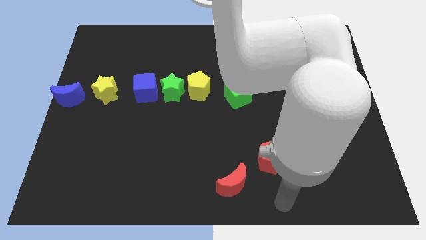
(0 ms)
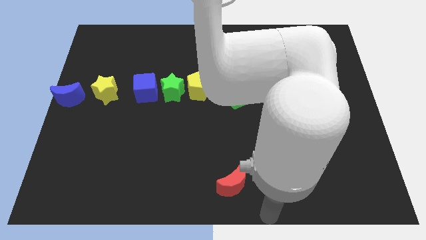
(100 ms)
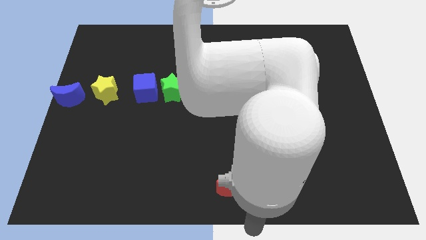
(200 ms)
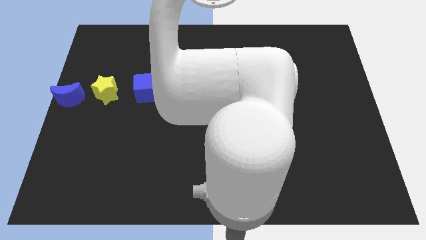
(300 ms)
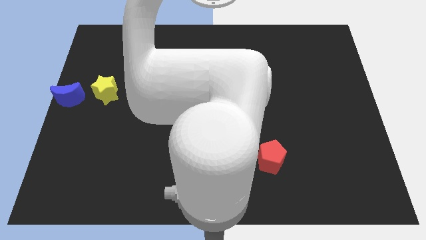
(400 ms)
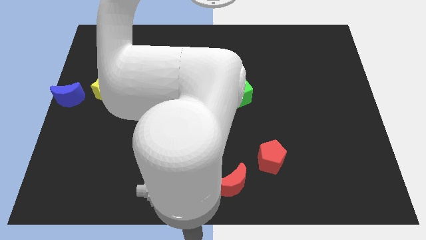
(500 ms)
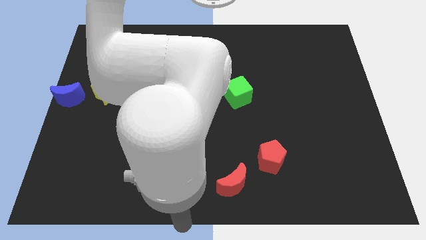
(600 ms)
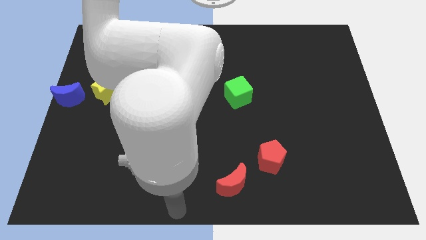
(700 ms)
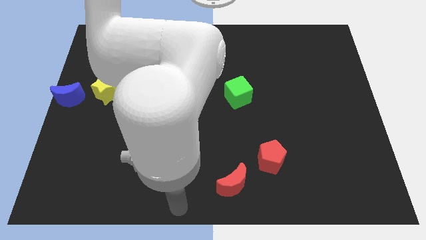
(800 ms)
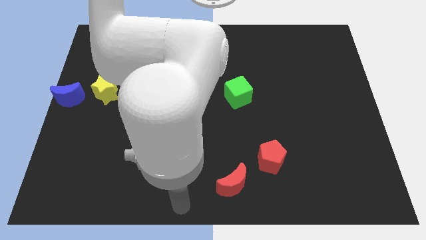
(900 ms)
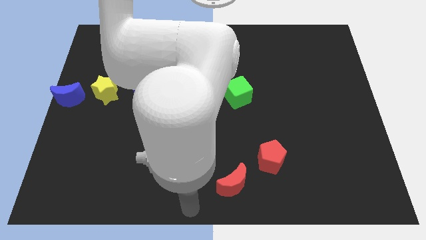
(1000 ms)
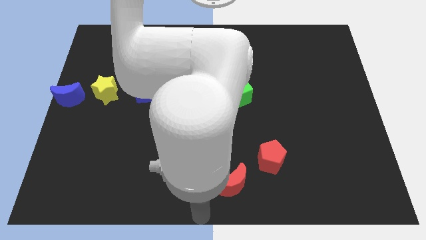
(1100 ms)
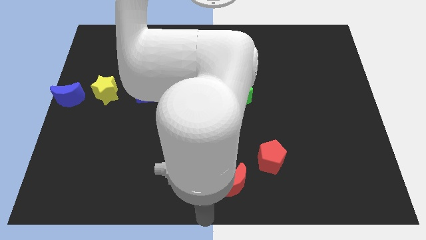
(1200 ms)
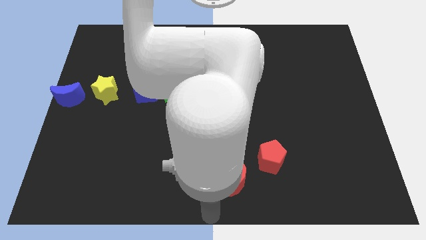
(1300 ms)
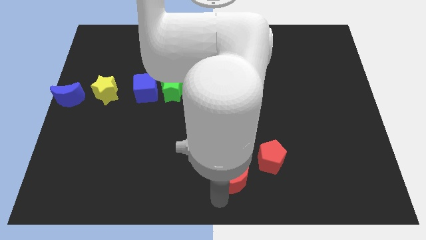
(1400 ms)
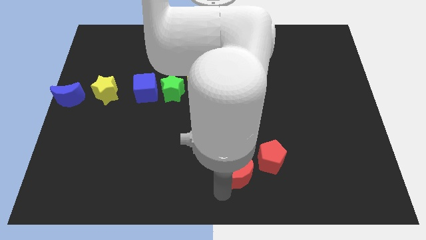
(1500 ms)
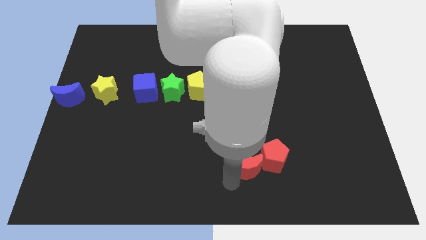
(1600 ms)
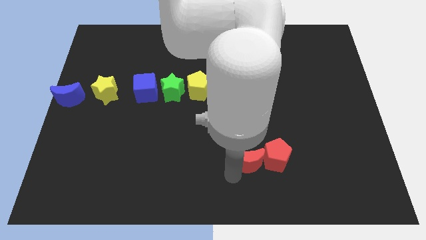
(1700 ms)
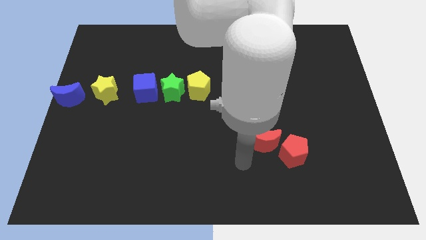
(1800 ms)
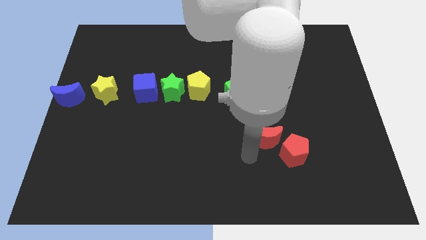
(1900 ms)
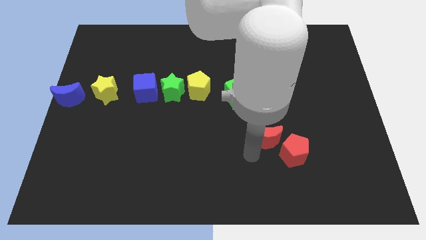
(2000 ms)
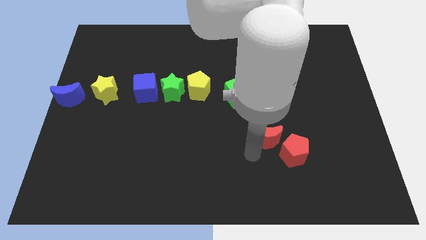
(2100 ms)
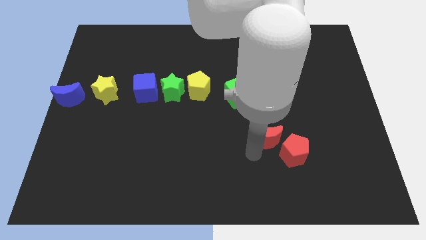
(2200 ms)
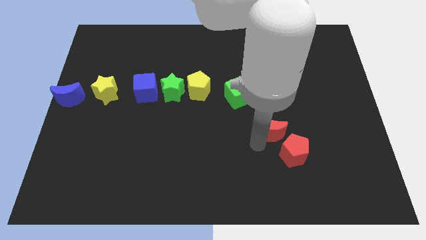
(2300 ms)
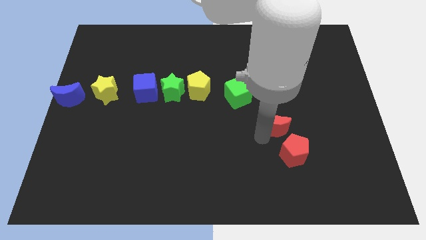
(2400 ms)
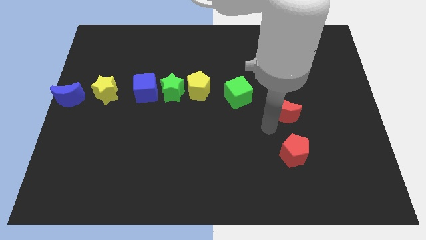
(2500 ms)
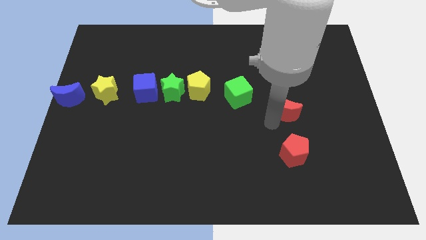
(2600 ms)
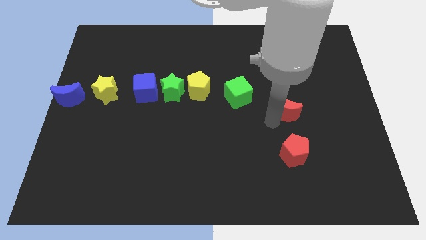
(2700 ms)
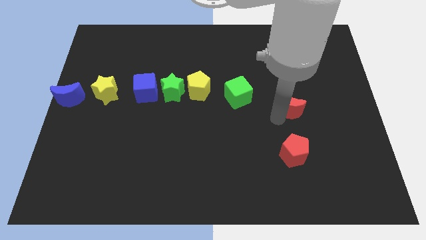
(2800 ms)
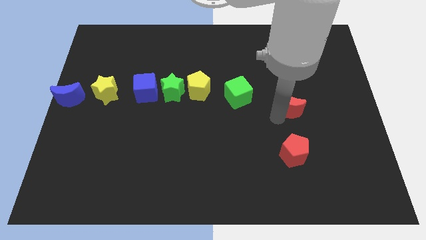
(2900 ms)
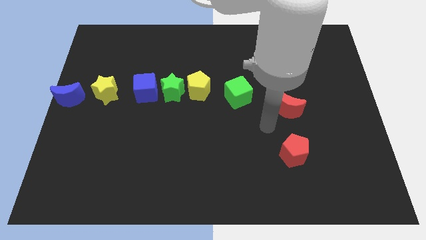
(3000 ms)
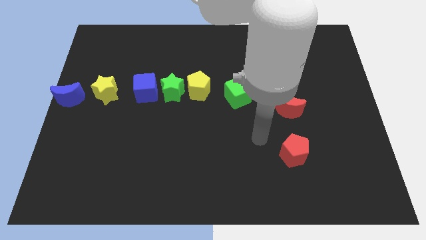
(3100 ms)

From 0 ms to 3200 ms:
place the red moon above the red pentagon

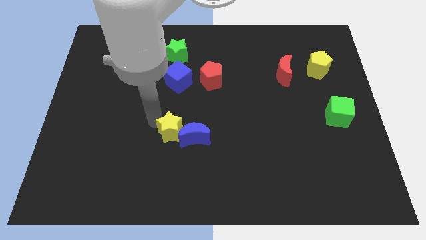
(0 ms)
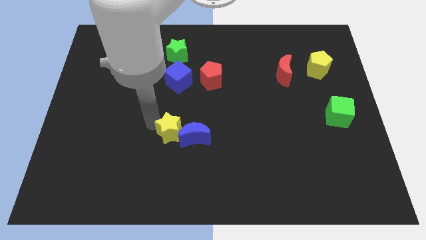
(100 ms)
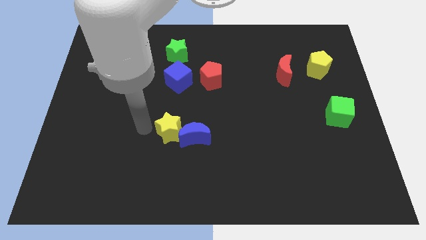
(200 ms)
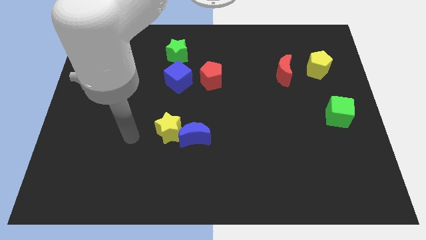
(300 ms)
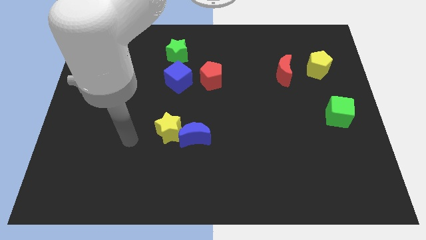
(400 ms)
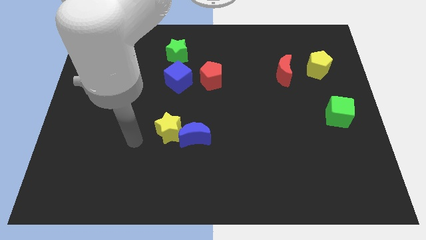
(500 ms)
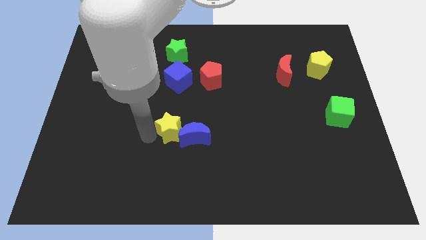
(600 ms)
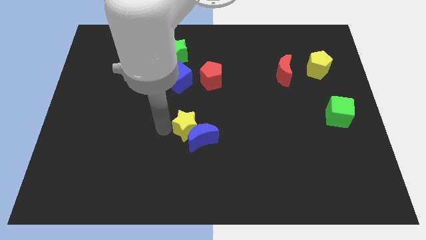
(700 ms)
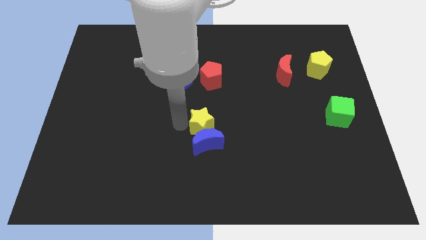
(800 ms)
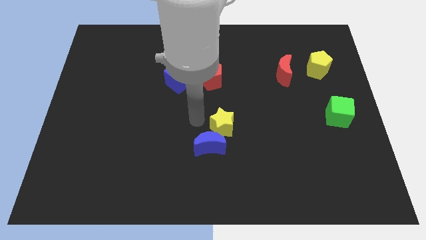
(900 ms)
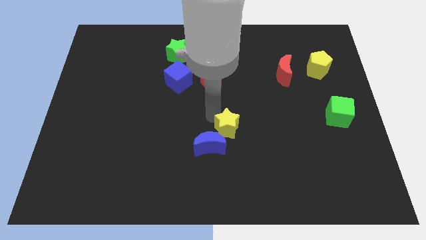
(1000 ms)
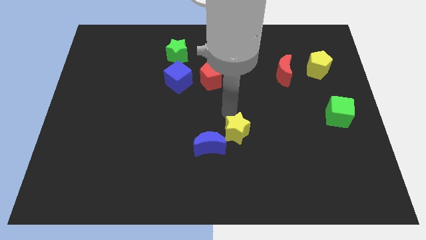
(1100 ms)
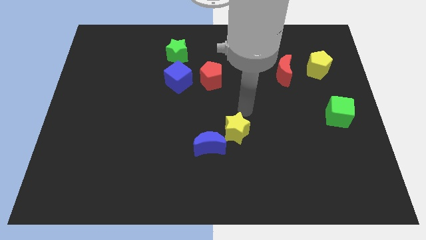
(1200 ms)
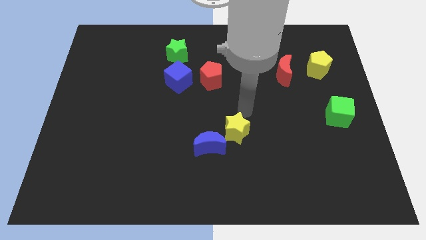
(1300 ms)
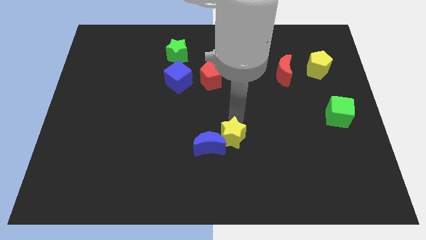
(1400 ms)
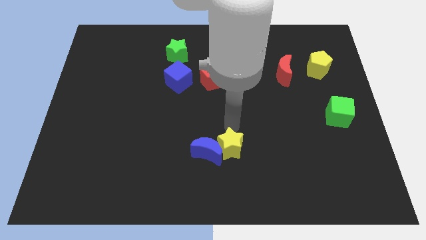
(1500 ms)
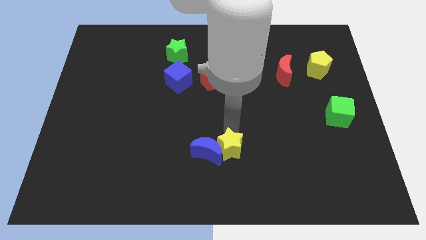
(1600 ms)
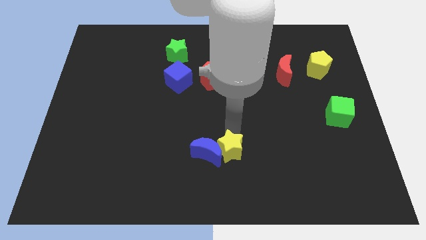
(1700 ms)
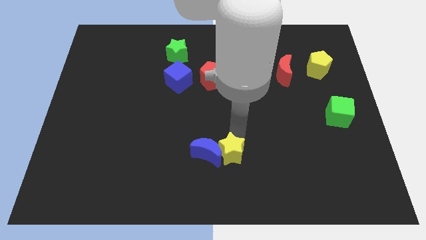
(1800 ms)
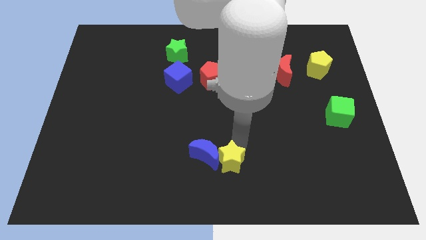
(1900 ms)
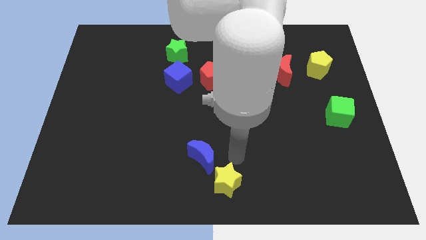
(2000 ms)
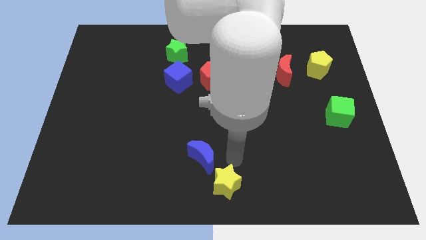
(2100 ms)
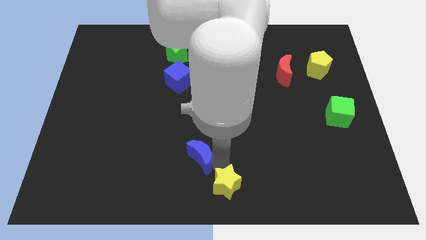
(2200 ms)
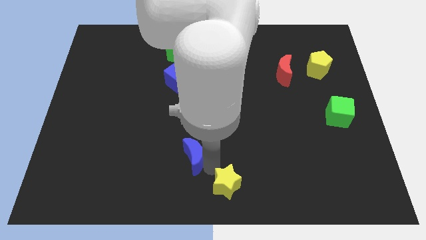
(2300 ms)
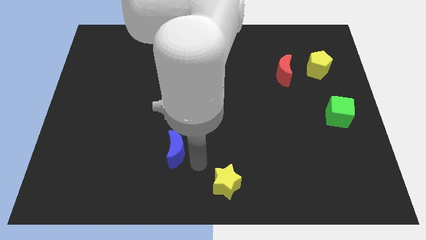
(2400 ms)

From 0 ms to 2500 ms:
push the yellow star to the bottom right of the blue crescent

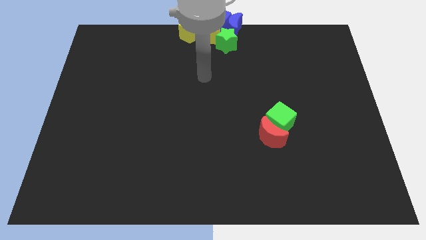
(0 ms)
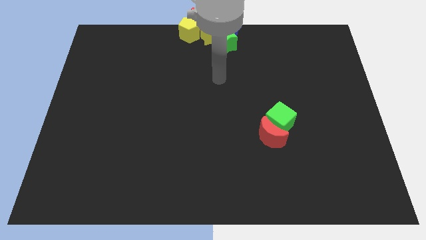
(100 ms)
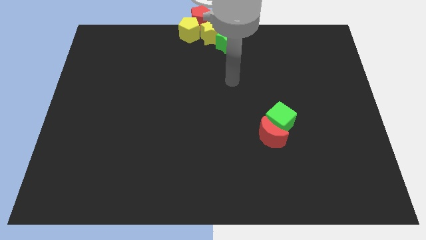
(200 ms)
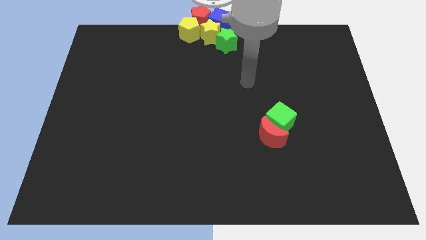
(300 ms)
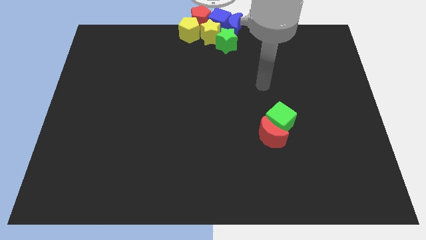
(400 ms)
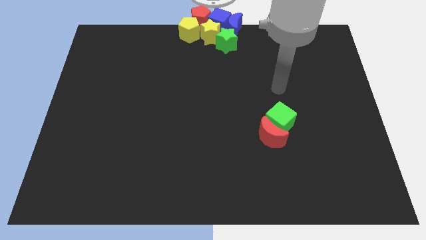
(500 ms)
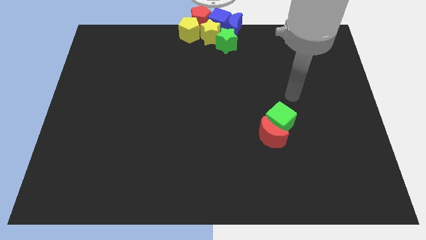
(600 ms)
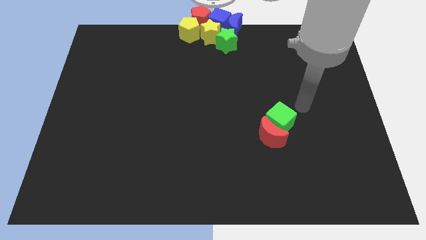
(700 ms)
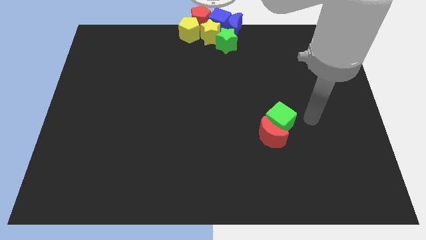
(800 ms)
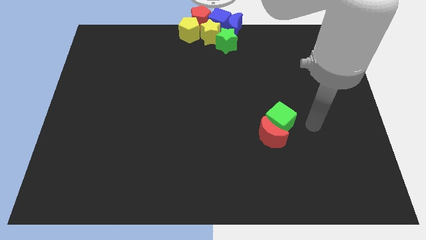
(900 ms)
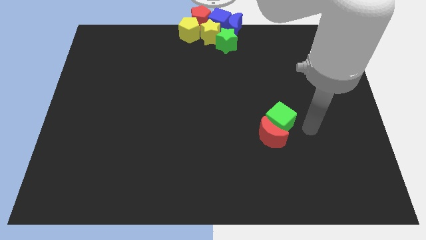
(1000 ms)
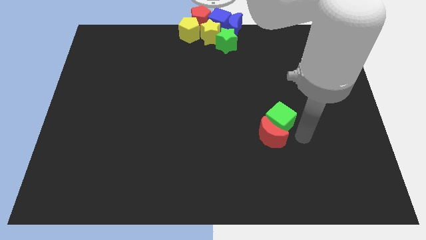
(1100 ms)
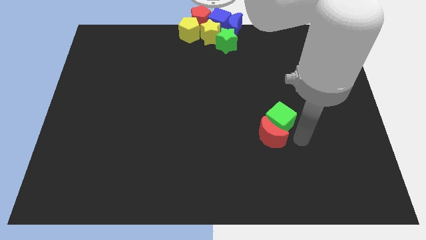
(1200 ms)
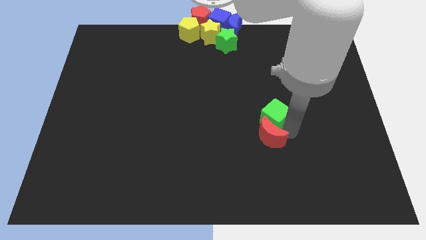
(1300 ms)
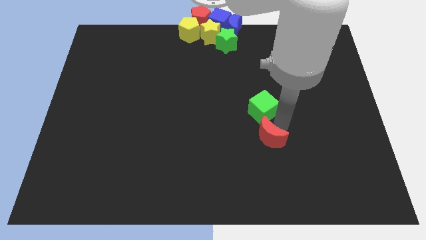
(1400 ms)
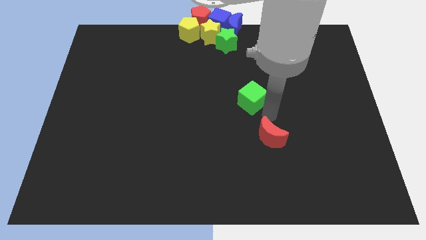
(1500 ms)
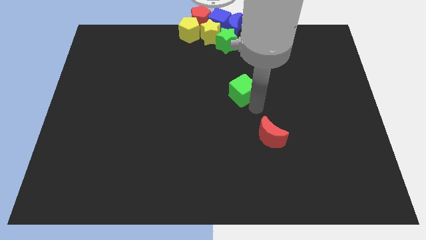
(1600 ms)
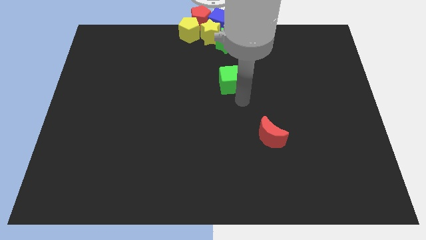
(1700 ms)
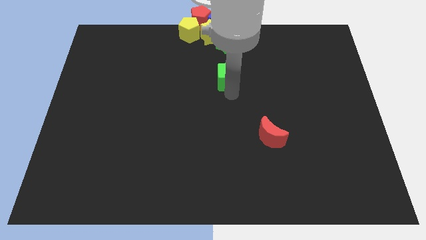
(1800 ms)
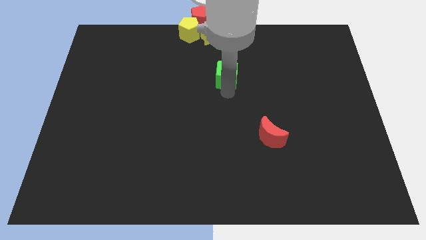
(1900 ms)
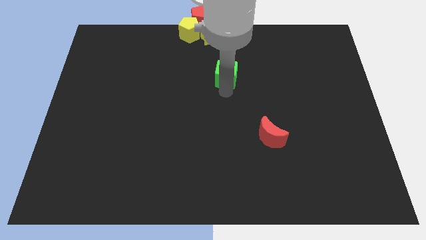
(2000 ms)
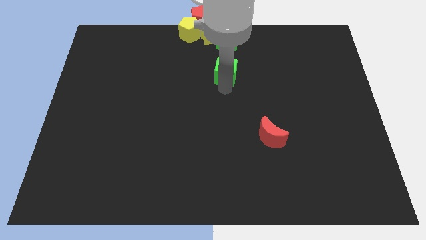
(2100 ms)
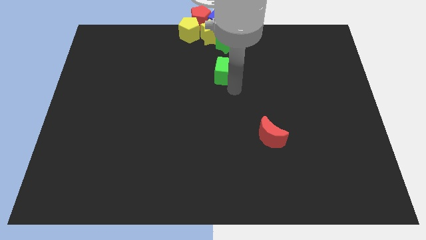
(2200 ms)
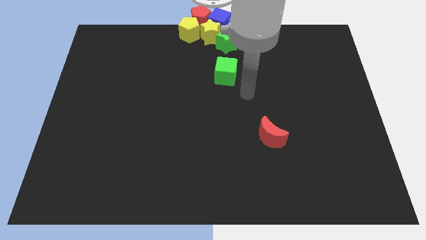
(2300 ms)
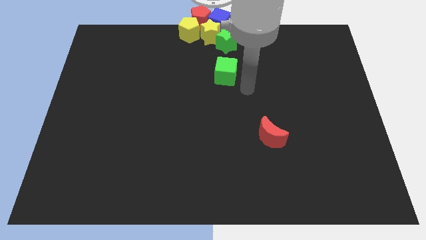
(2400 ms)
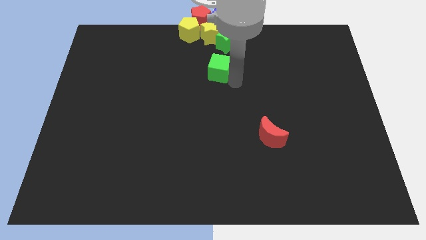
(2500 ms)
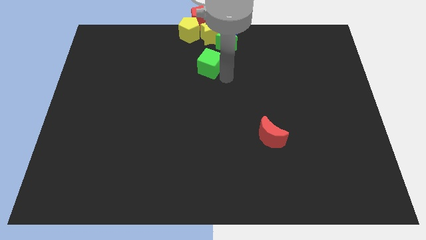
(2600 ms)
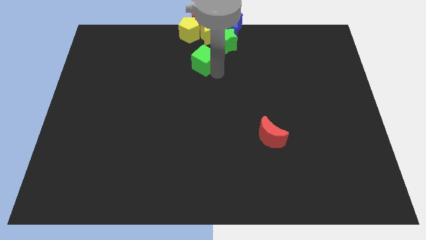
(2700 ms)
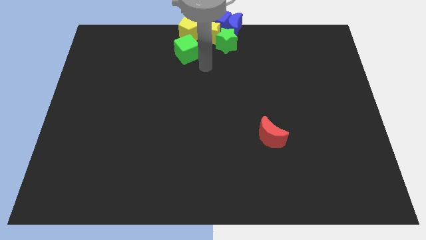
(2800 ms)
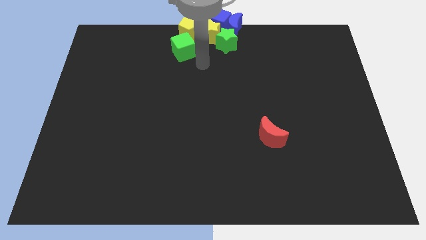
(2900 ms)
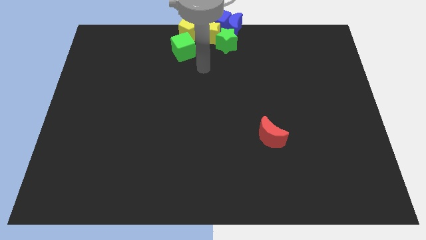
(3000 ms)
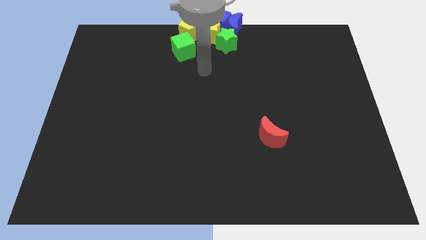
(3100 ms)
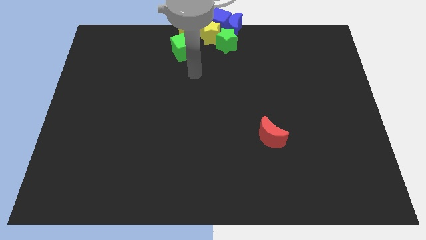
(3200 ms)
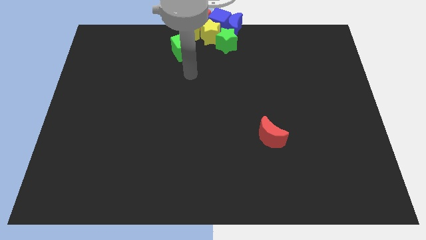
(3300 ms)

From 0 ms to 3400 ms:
place the green cube below the yellow pentagon

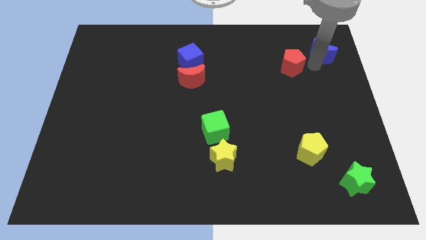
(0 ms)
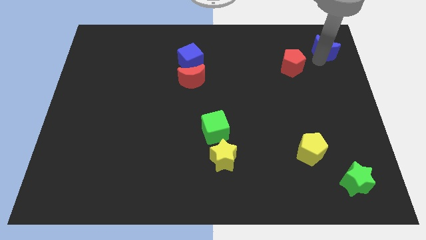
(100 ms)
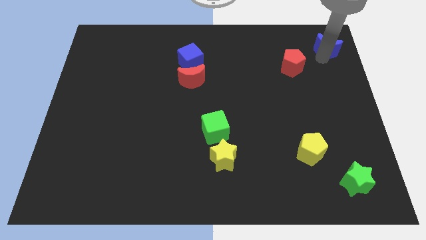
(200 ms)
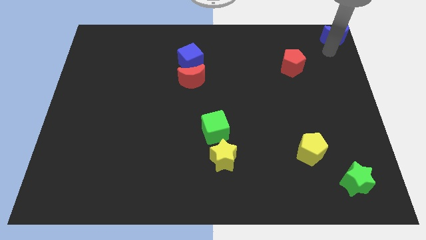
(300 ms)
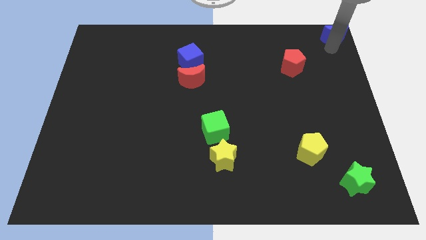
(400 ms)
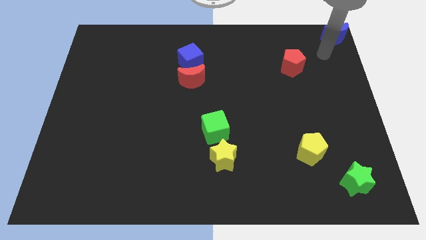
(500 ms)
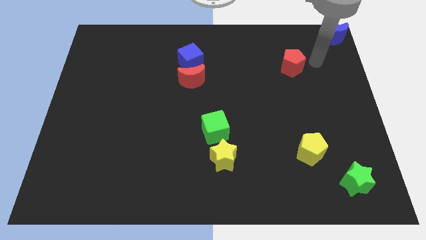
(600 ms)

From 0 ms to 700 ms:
push the blue crescent to the top right corner of the board
